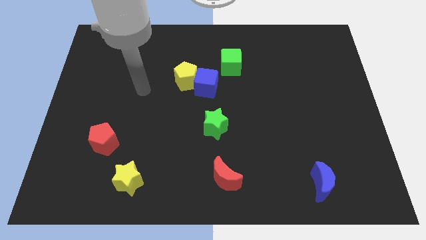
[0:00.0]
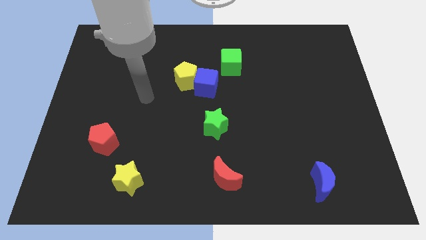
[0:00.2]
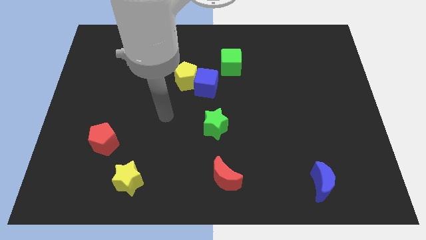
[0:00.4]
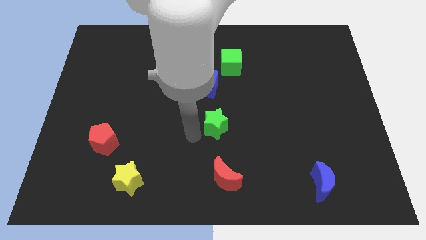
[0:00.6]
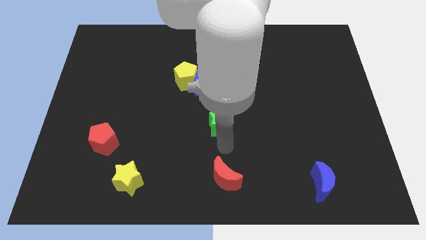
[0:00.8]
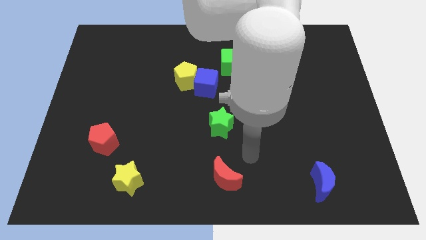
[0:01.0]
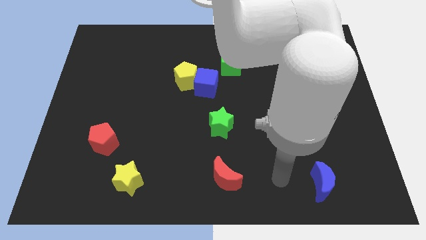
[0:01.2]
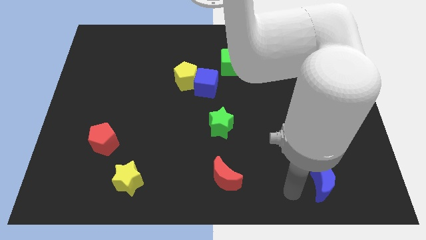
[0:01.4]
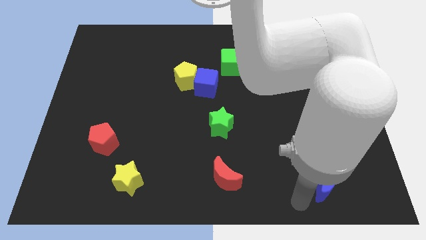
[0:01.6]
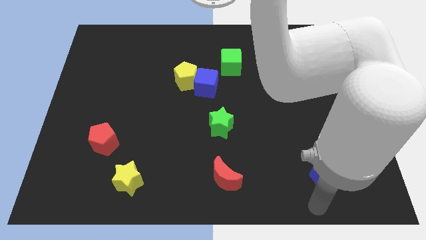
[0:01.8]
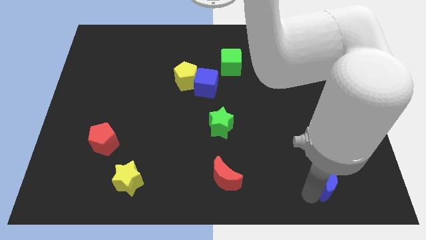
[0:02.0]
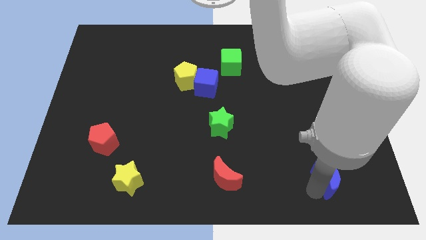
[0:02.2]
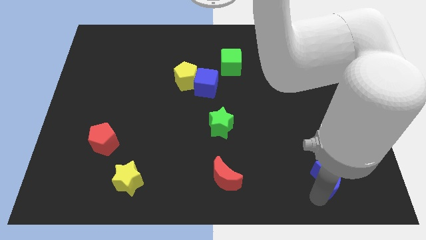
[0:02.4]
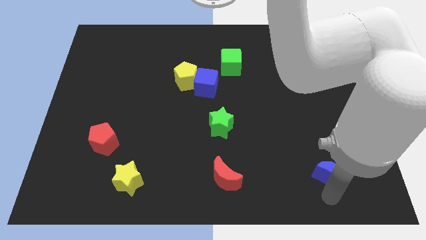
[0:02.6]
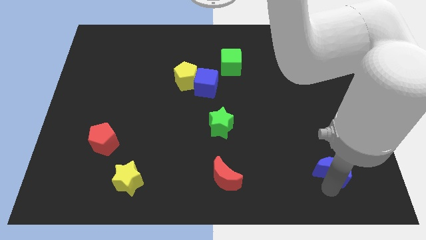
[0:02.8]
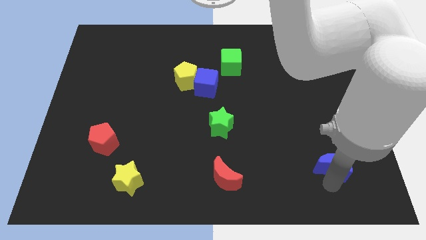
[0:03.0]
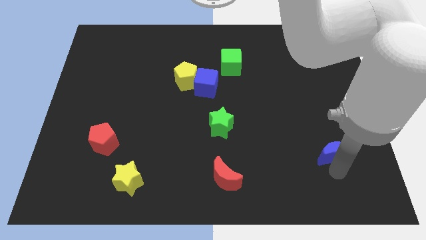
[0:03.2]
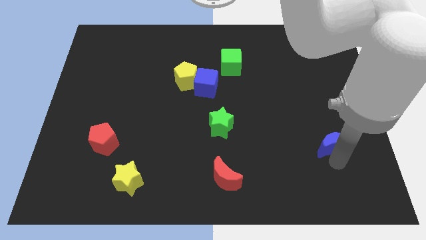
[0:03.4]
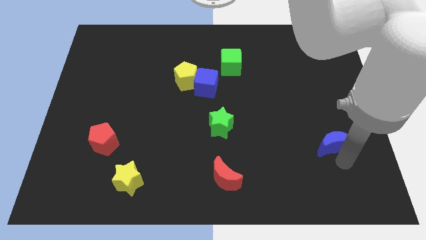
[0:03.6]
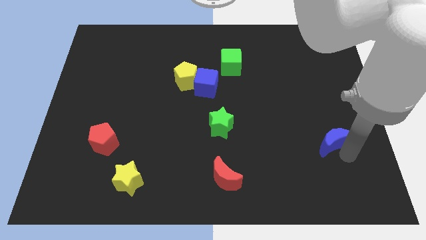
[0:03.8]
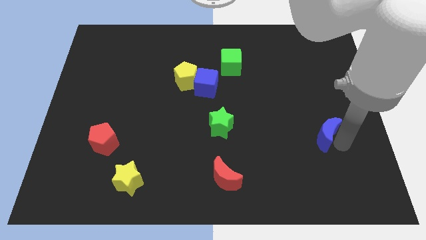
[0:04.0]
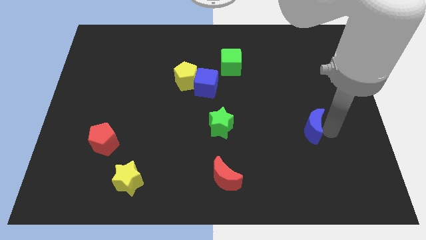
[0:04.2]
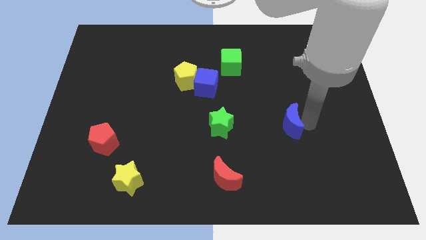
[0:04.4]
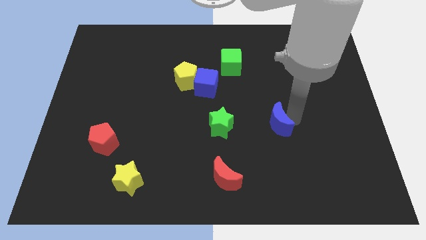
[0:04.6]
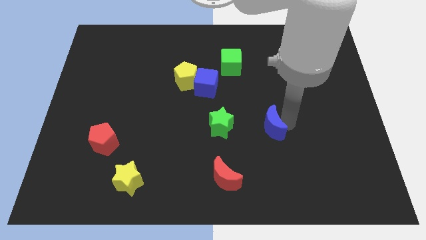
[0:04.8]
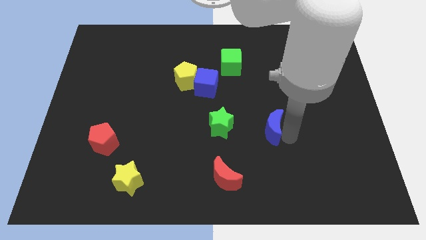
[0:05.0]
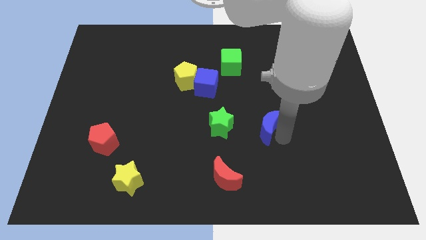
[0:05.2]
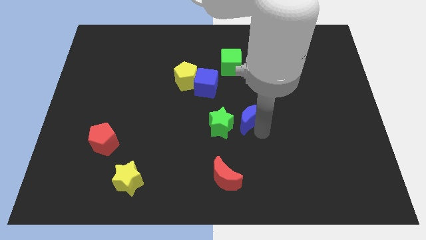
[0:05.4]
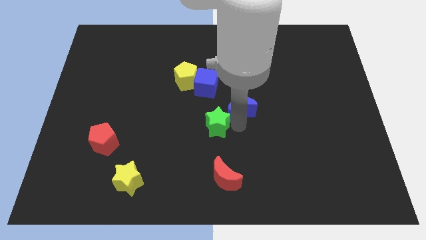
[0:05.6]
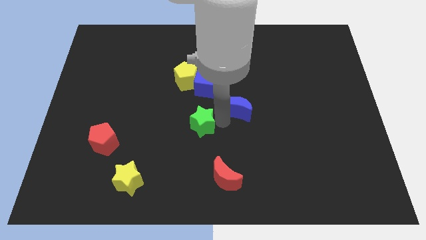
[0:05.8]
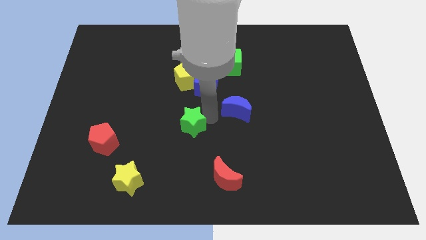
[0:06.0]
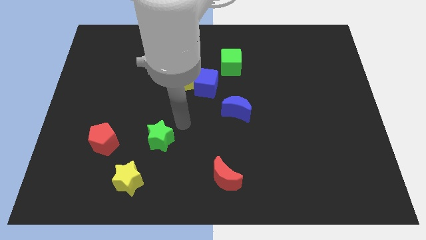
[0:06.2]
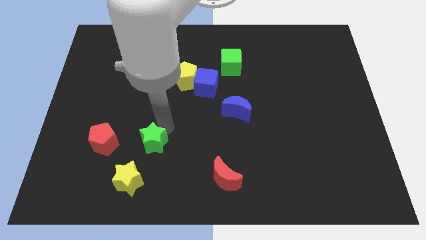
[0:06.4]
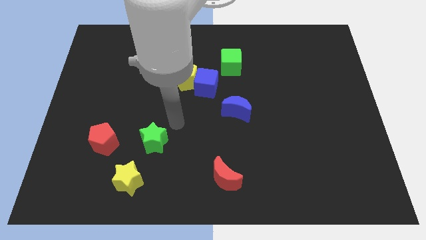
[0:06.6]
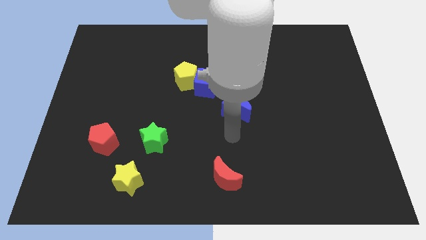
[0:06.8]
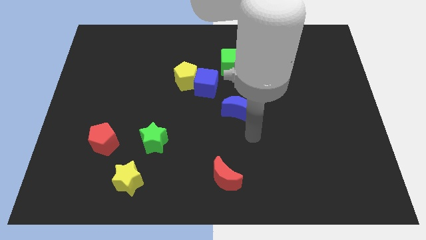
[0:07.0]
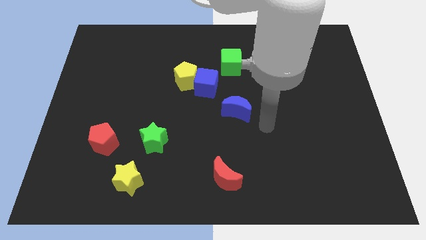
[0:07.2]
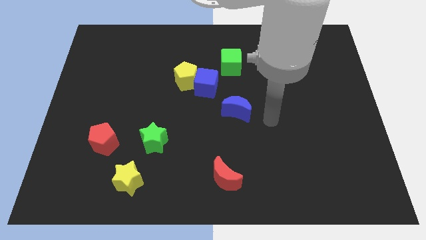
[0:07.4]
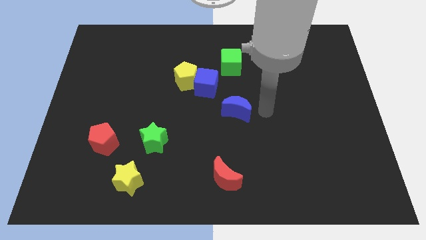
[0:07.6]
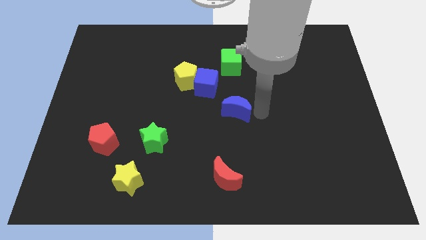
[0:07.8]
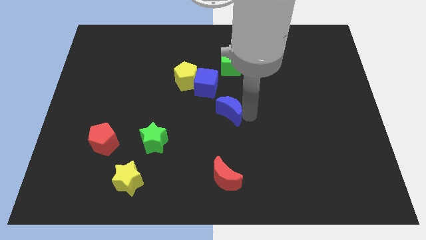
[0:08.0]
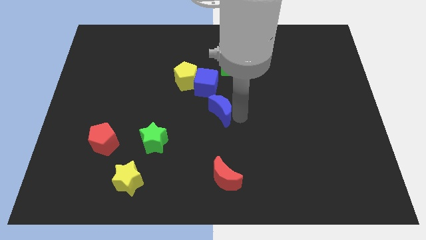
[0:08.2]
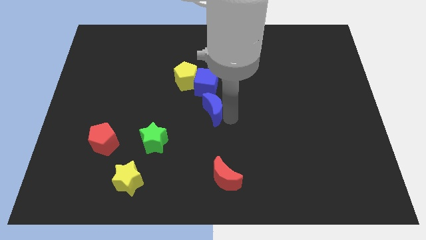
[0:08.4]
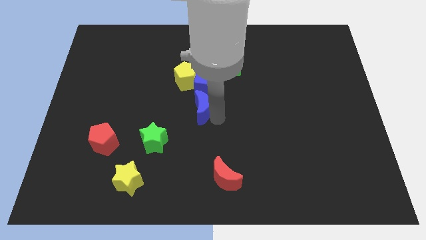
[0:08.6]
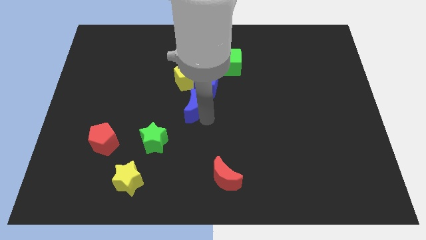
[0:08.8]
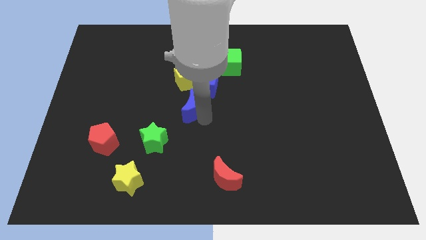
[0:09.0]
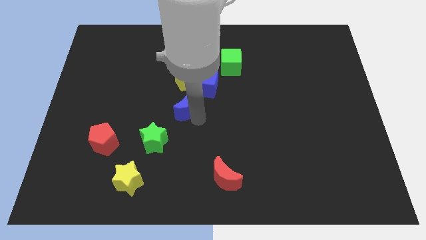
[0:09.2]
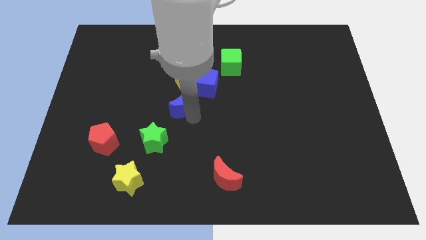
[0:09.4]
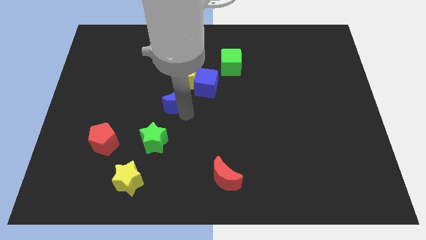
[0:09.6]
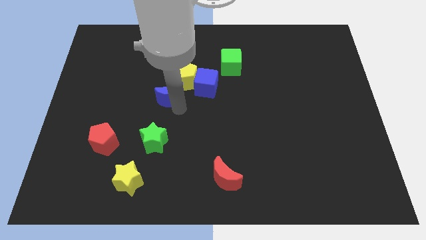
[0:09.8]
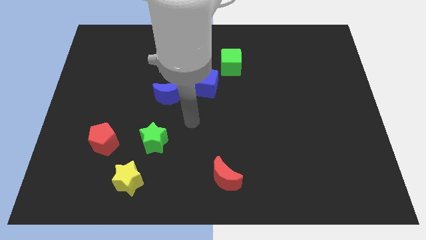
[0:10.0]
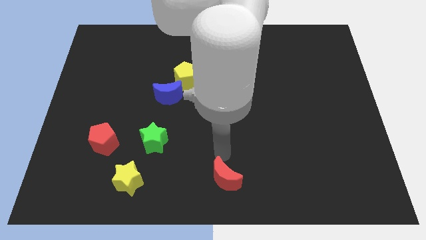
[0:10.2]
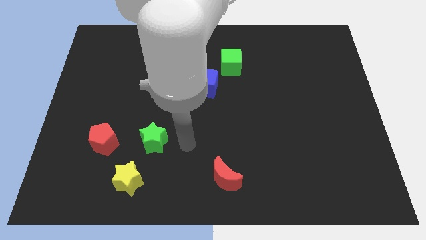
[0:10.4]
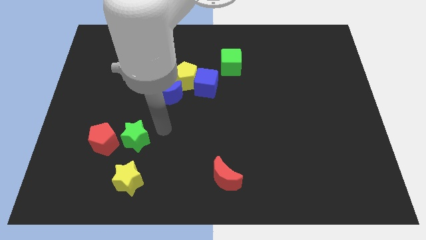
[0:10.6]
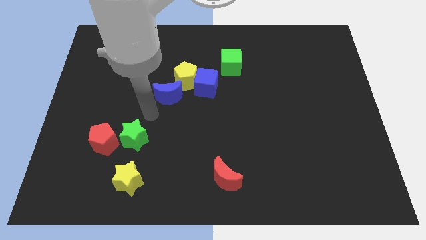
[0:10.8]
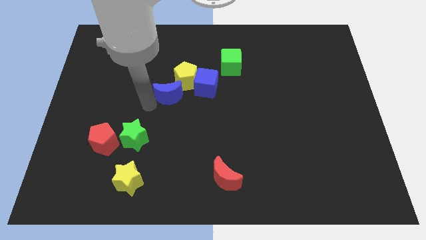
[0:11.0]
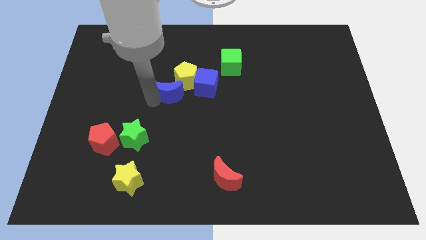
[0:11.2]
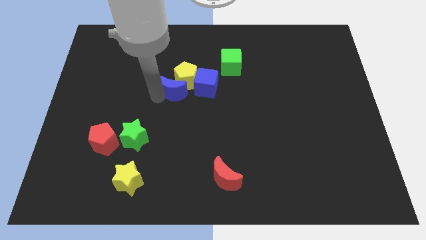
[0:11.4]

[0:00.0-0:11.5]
slide the blue moon to the yellow pentagon

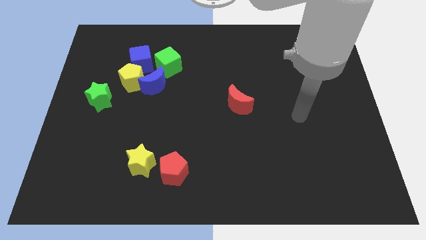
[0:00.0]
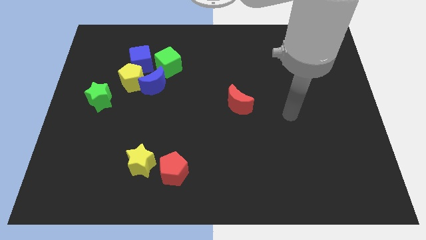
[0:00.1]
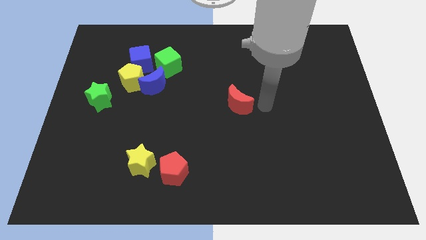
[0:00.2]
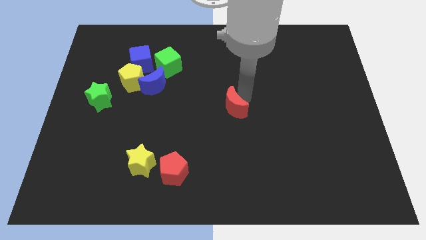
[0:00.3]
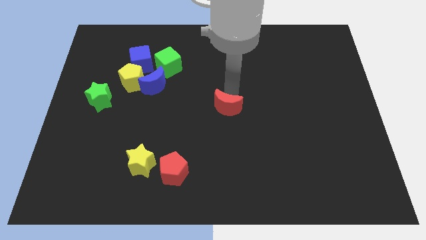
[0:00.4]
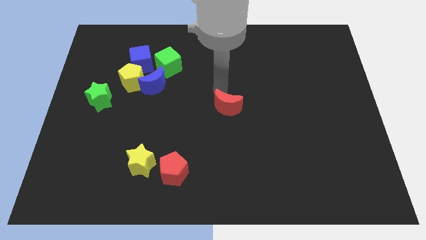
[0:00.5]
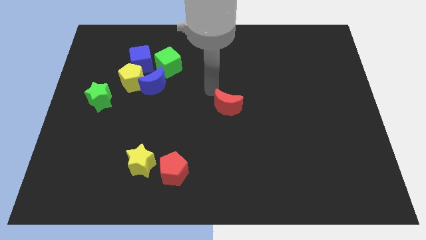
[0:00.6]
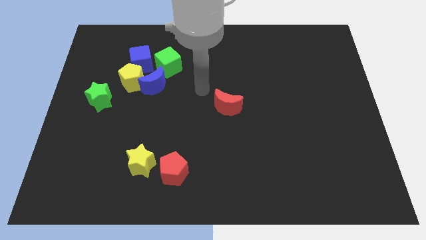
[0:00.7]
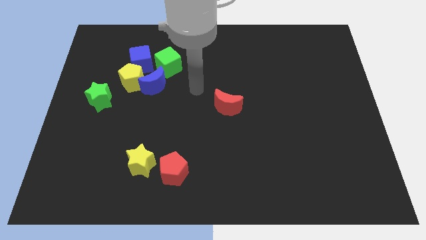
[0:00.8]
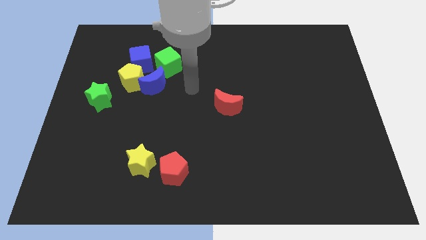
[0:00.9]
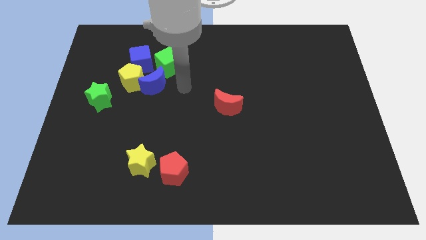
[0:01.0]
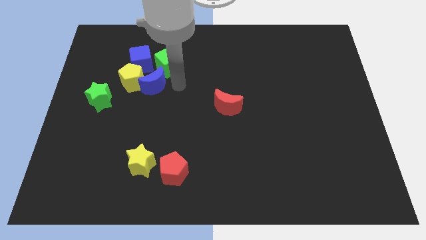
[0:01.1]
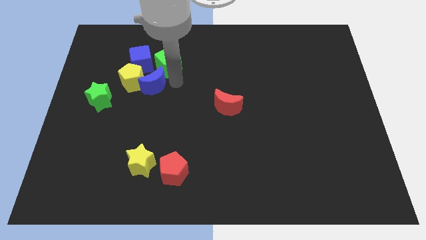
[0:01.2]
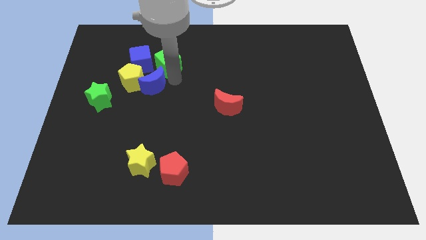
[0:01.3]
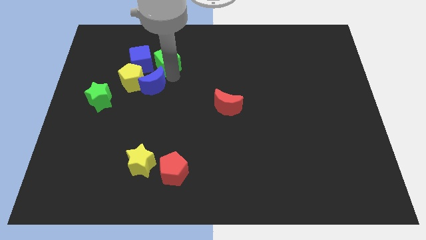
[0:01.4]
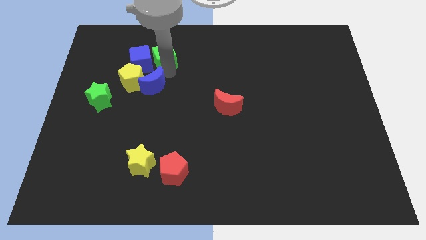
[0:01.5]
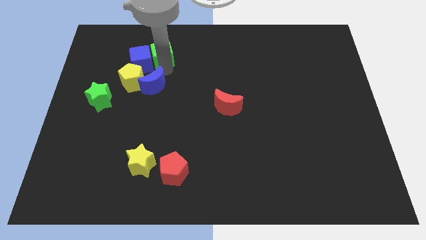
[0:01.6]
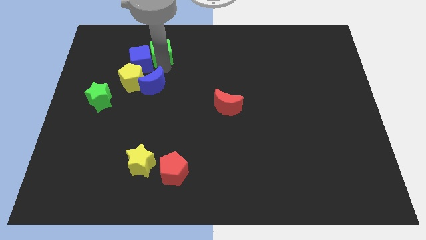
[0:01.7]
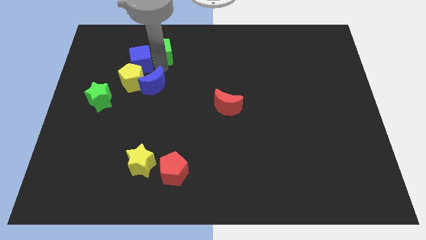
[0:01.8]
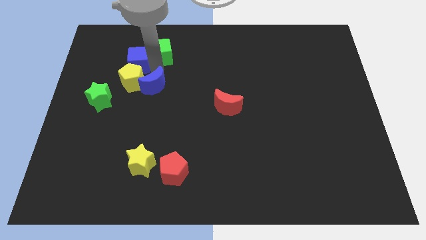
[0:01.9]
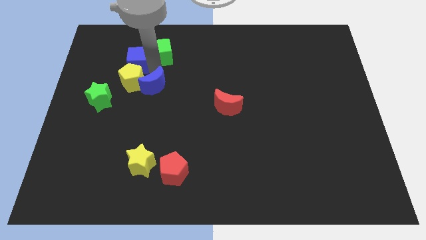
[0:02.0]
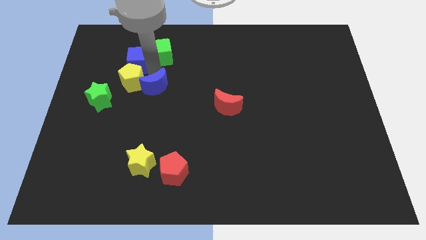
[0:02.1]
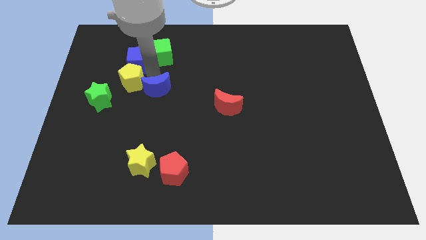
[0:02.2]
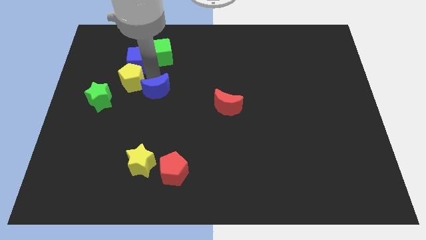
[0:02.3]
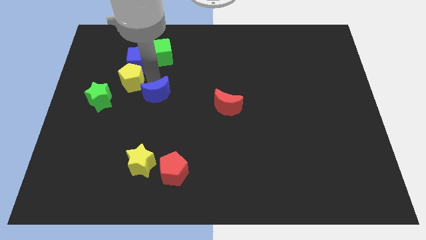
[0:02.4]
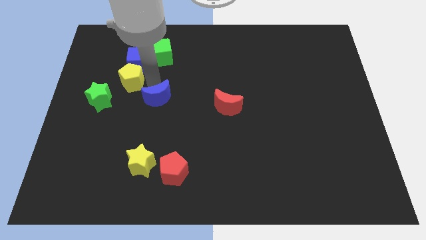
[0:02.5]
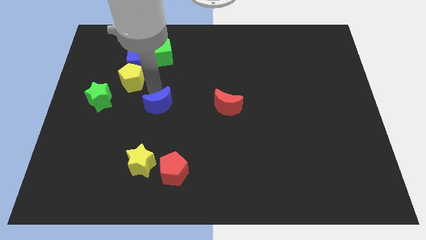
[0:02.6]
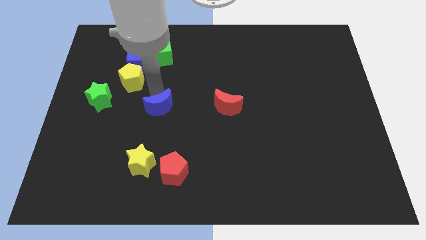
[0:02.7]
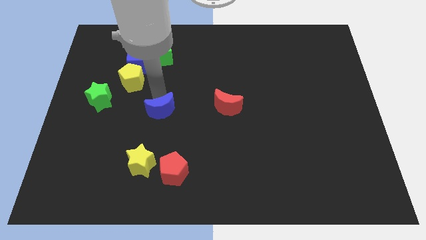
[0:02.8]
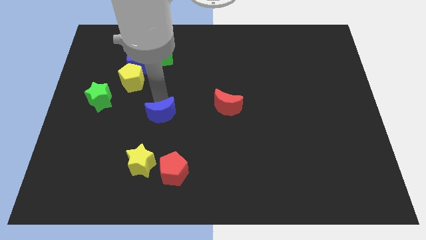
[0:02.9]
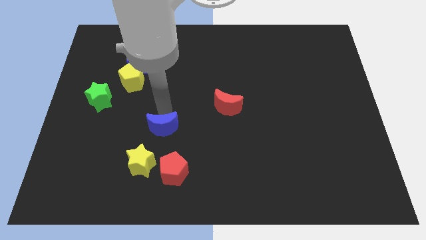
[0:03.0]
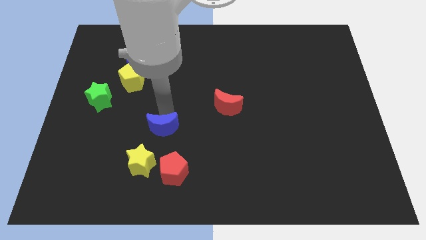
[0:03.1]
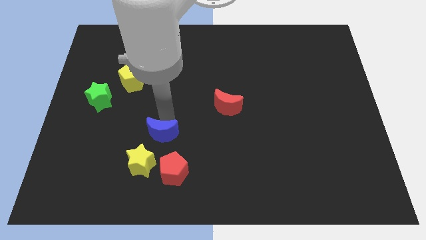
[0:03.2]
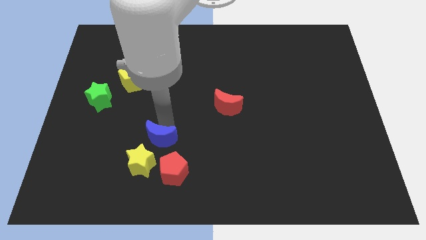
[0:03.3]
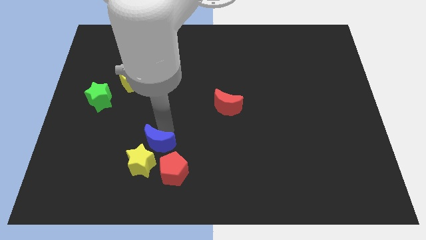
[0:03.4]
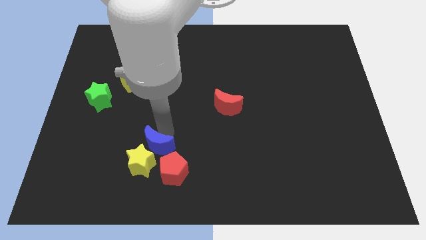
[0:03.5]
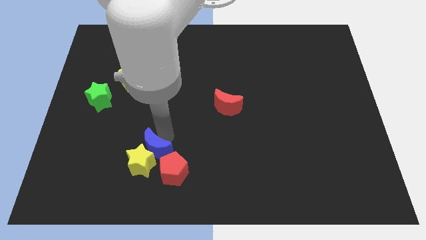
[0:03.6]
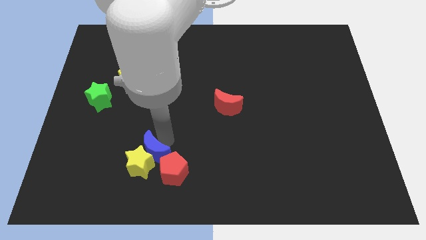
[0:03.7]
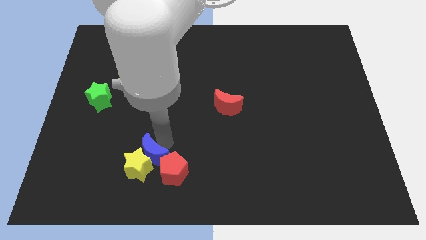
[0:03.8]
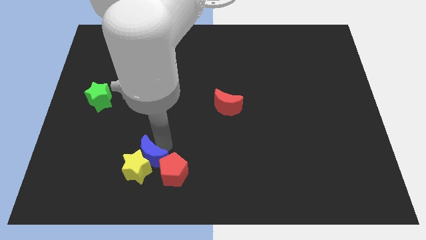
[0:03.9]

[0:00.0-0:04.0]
slide the blue moon towards the red pentagon
